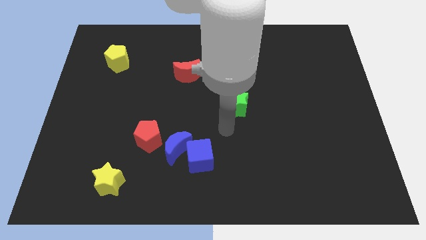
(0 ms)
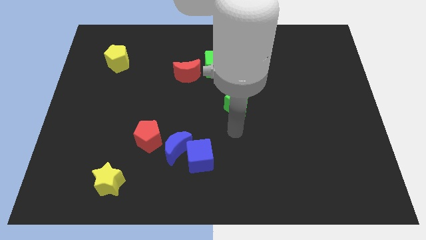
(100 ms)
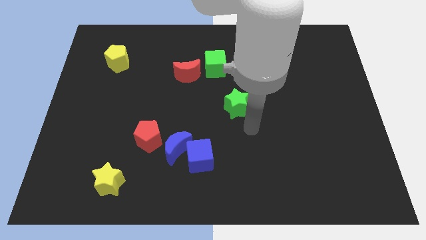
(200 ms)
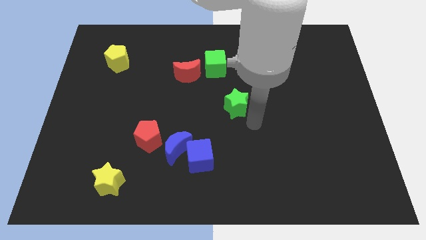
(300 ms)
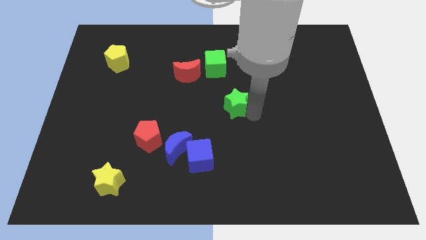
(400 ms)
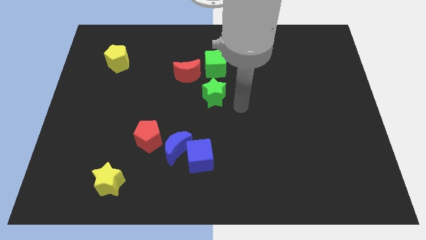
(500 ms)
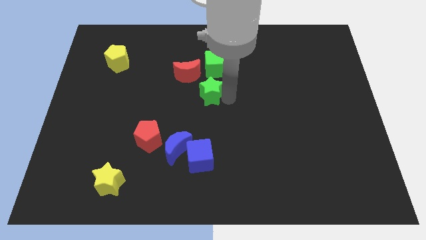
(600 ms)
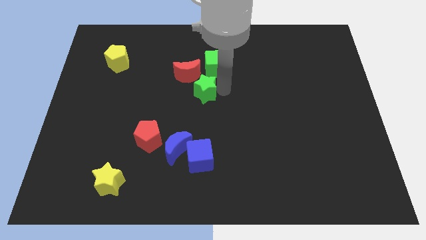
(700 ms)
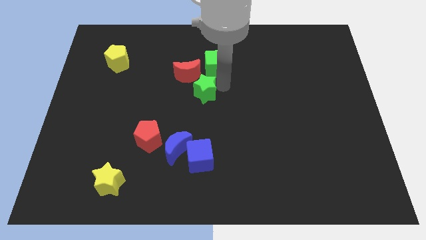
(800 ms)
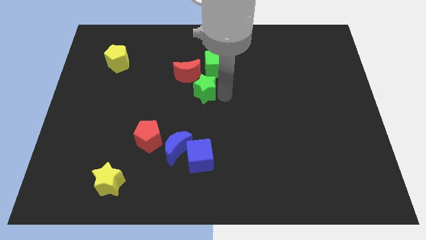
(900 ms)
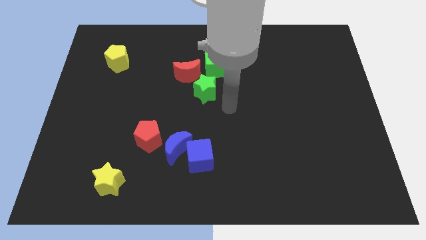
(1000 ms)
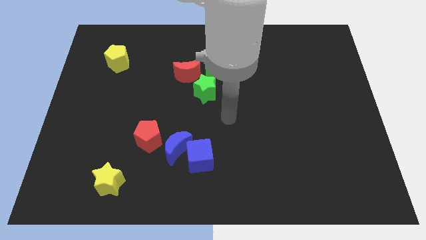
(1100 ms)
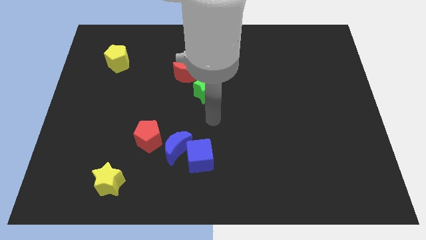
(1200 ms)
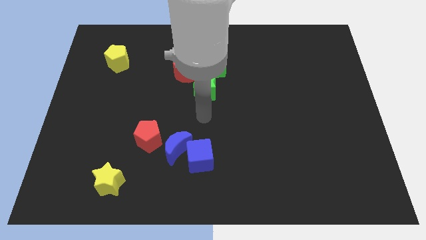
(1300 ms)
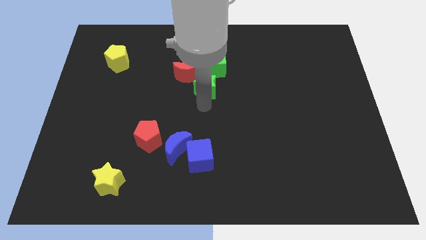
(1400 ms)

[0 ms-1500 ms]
push the green star into the green cube

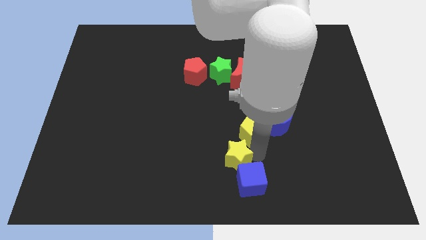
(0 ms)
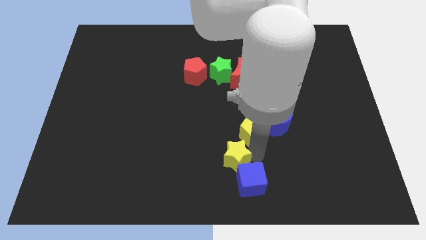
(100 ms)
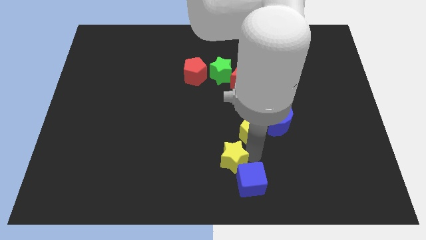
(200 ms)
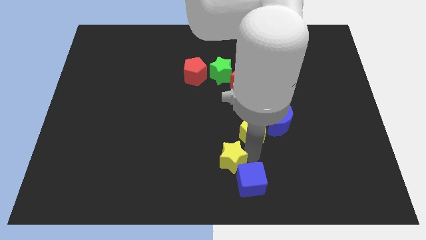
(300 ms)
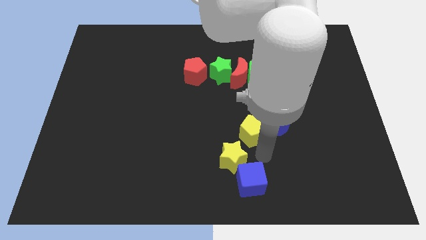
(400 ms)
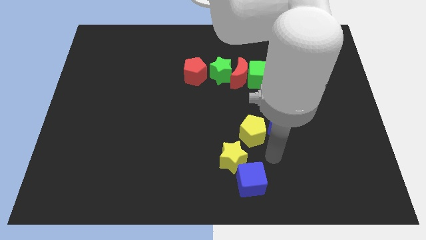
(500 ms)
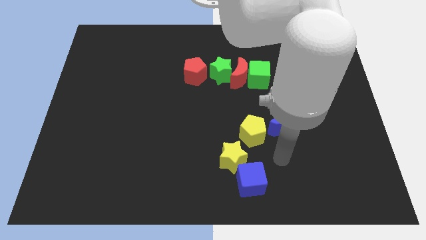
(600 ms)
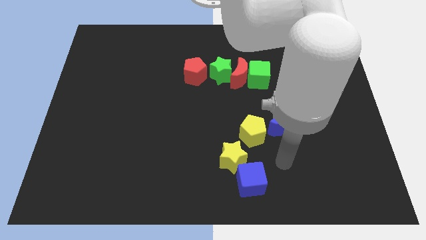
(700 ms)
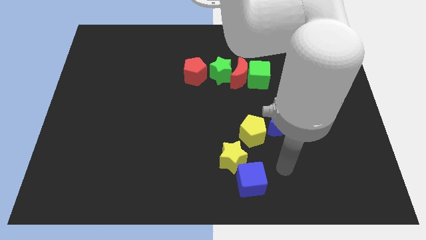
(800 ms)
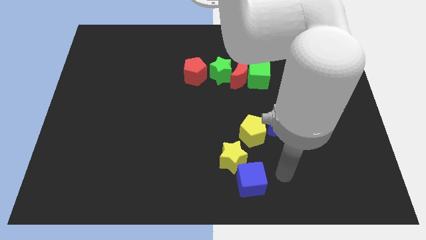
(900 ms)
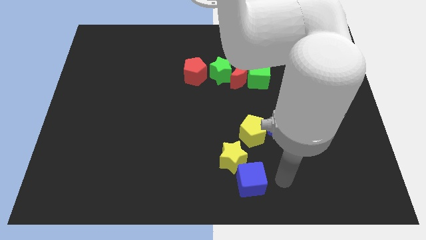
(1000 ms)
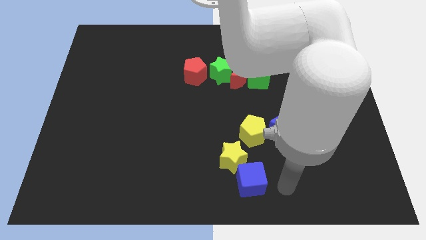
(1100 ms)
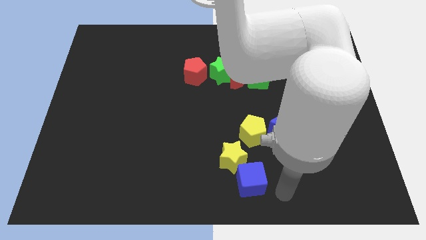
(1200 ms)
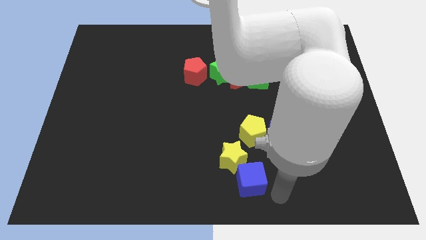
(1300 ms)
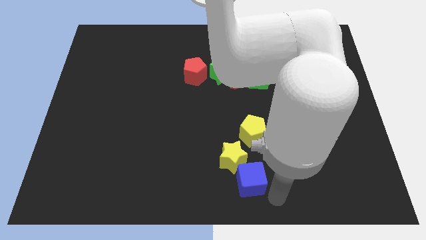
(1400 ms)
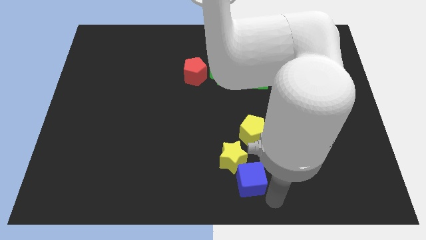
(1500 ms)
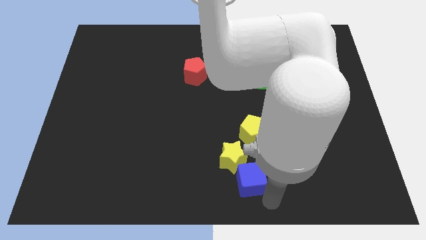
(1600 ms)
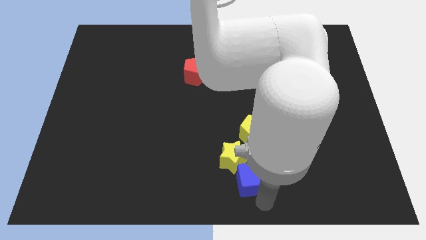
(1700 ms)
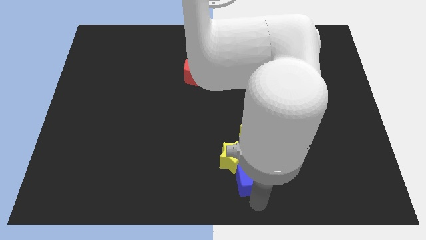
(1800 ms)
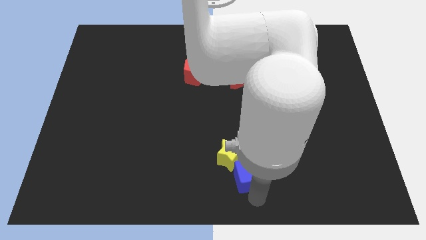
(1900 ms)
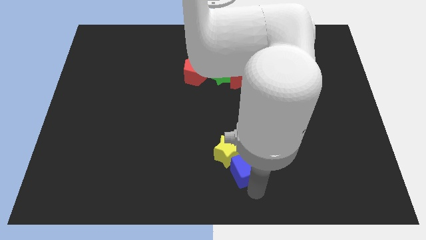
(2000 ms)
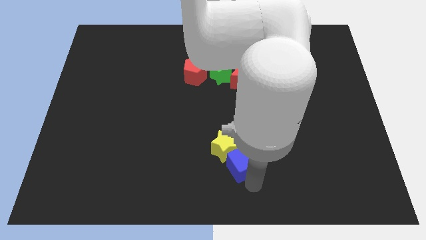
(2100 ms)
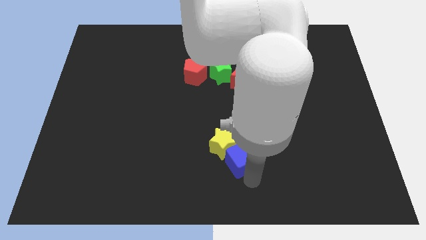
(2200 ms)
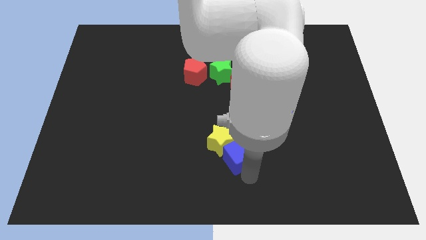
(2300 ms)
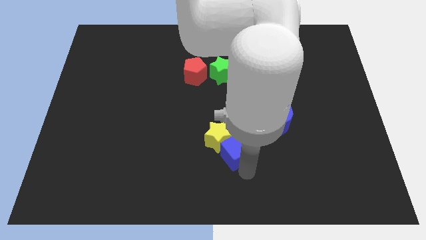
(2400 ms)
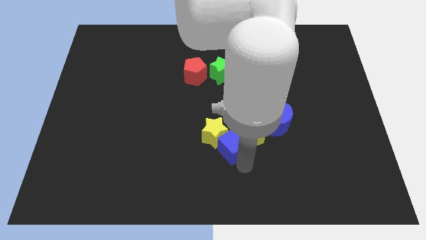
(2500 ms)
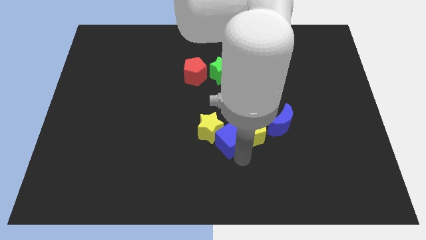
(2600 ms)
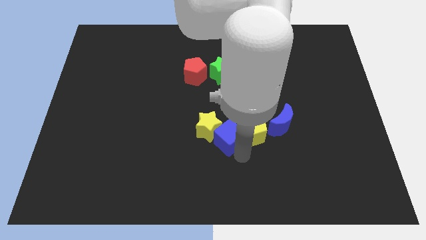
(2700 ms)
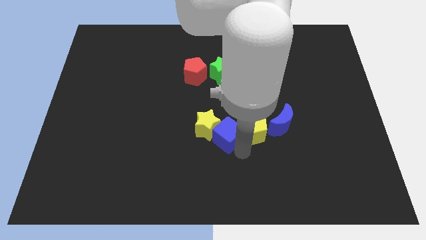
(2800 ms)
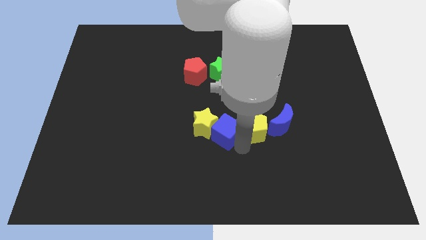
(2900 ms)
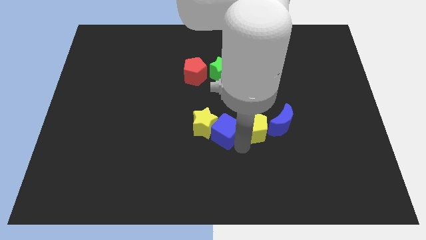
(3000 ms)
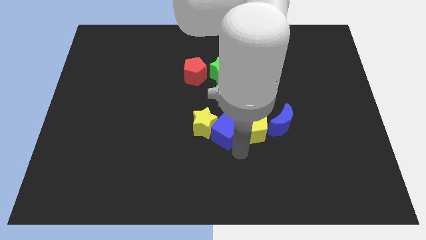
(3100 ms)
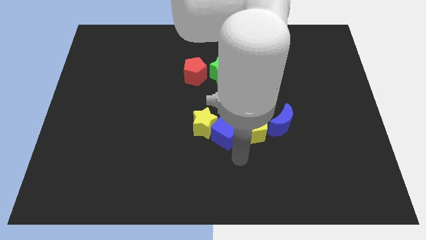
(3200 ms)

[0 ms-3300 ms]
move yellow star and blue cube

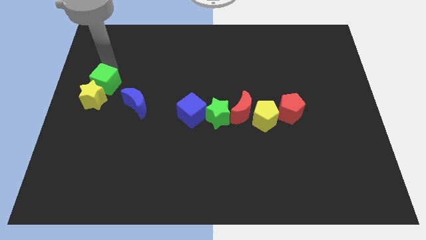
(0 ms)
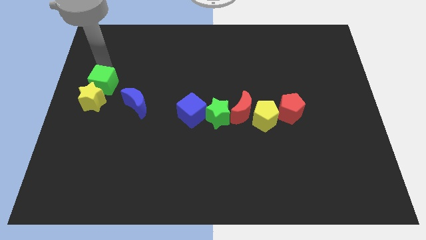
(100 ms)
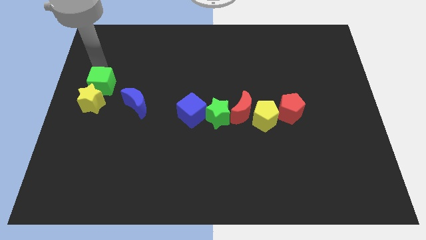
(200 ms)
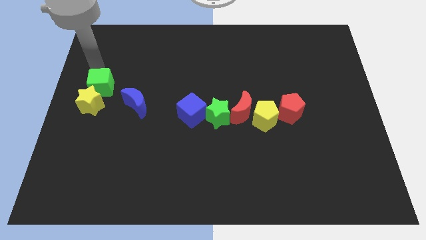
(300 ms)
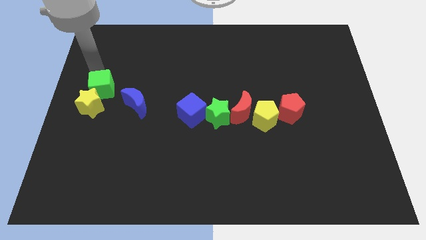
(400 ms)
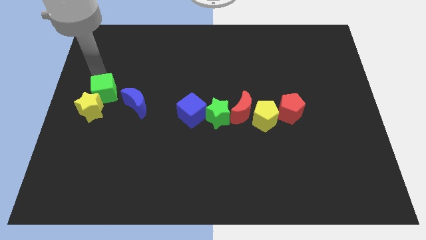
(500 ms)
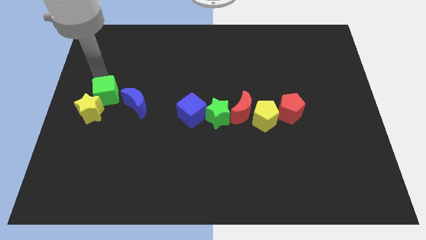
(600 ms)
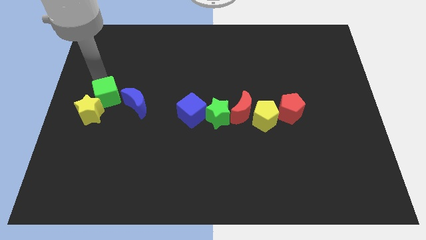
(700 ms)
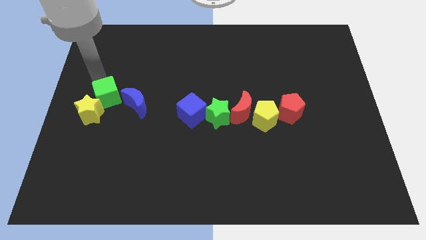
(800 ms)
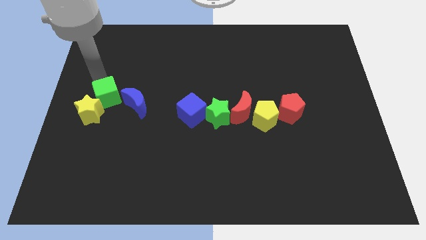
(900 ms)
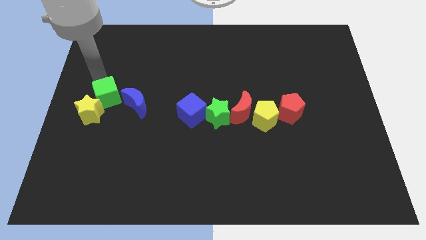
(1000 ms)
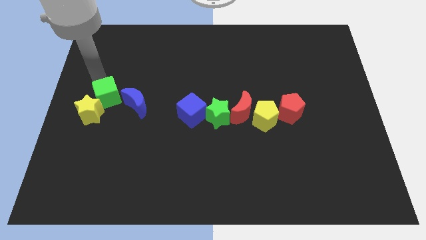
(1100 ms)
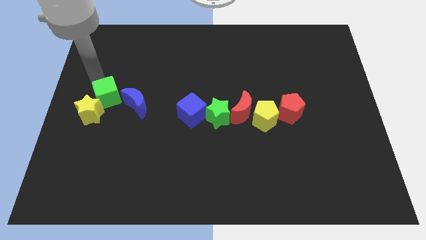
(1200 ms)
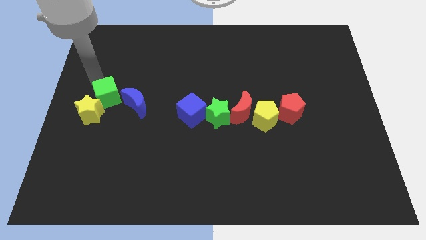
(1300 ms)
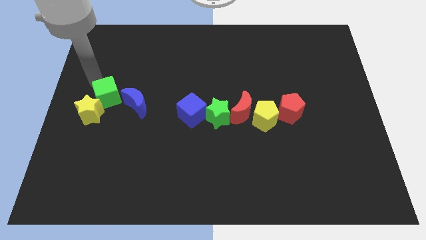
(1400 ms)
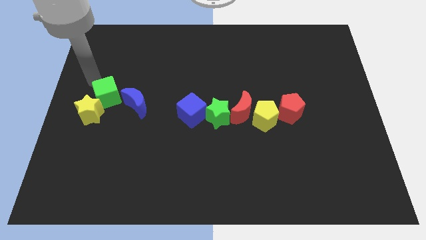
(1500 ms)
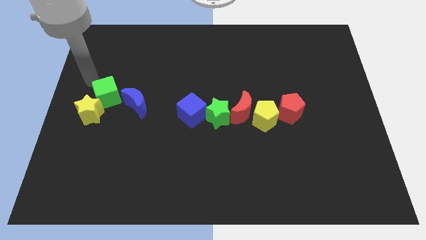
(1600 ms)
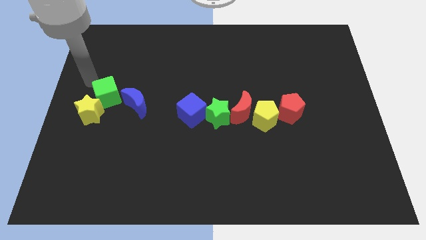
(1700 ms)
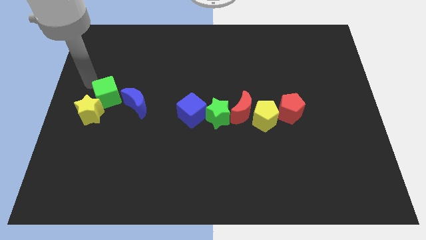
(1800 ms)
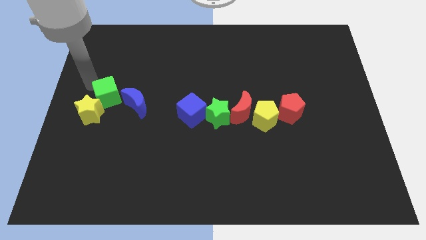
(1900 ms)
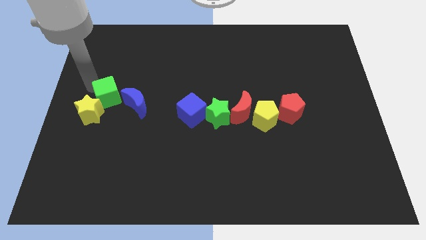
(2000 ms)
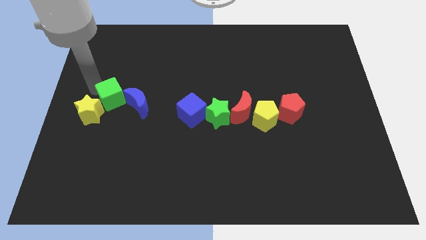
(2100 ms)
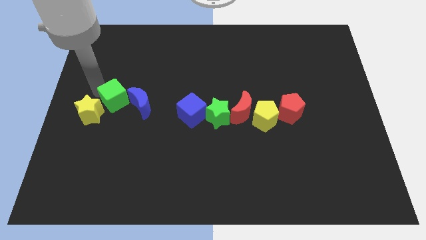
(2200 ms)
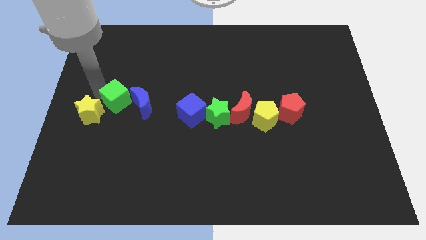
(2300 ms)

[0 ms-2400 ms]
place the green cube to right of yellow star

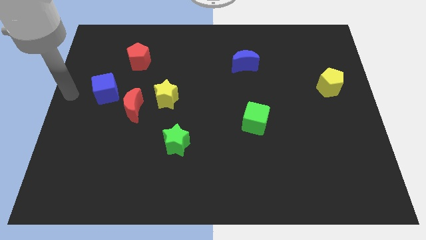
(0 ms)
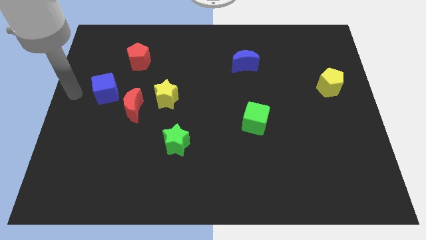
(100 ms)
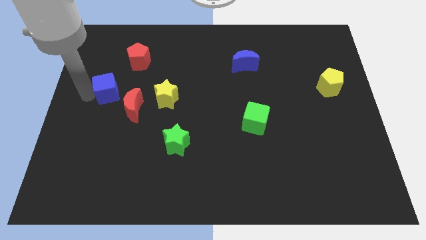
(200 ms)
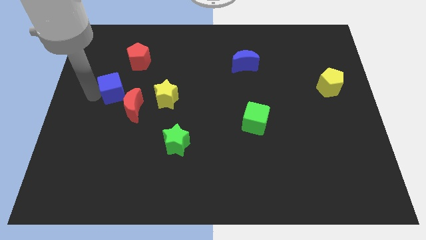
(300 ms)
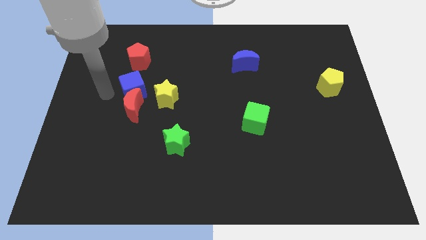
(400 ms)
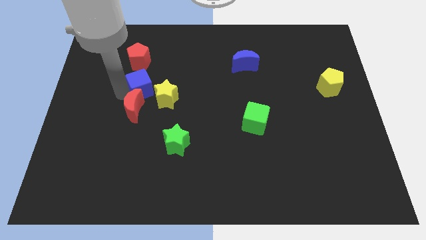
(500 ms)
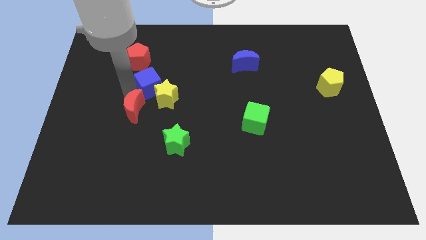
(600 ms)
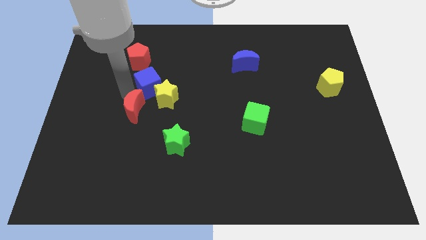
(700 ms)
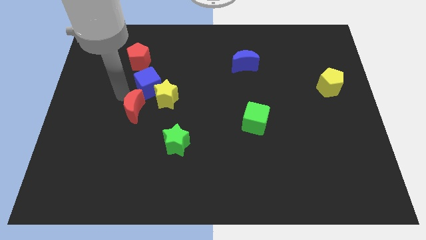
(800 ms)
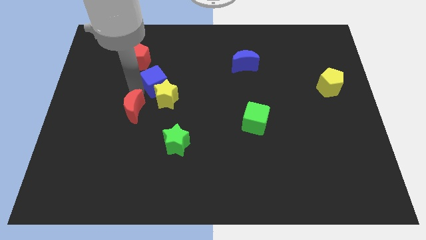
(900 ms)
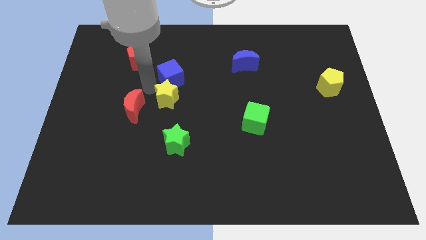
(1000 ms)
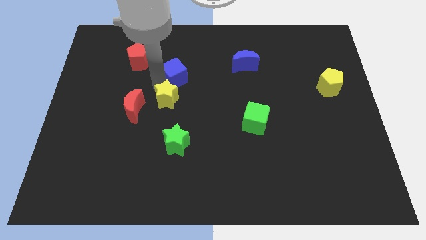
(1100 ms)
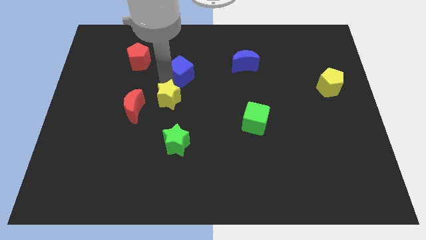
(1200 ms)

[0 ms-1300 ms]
move the red moon with the blue cube

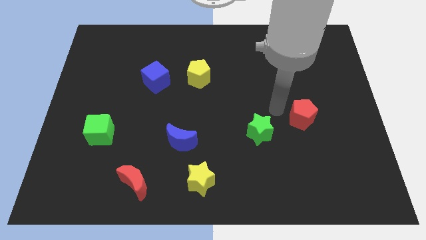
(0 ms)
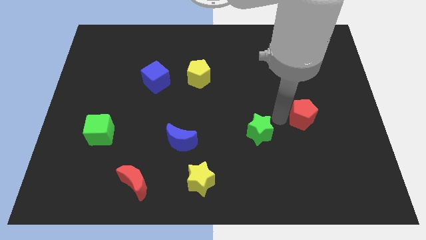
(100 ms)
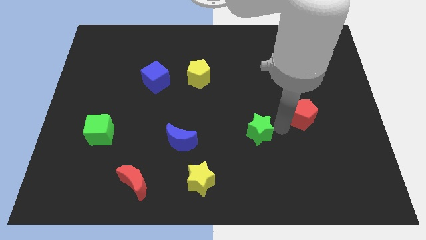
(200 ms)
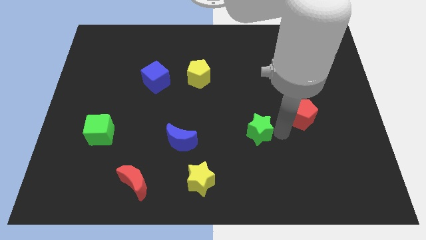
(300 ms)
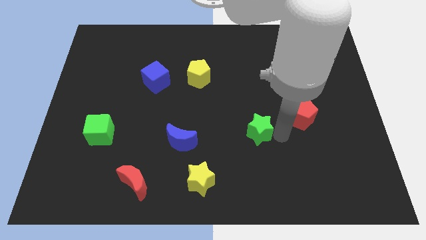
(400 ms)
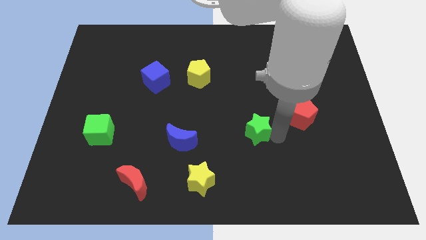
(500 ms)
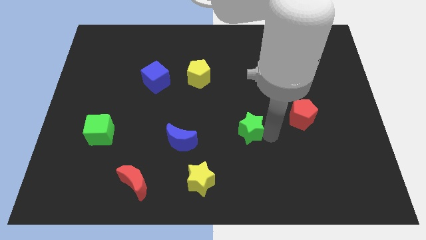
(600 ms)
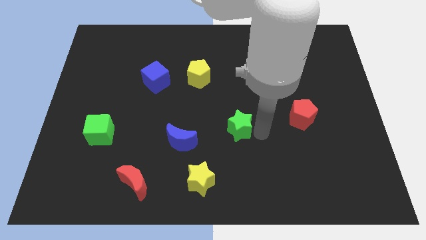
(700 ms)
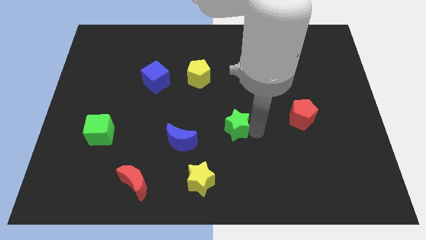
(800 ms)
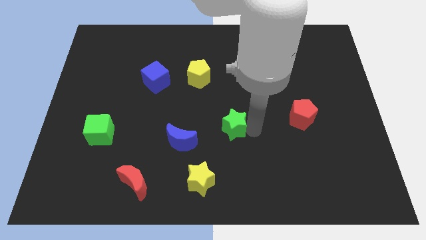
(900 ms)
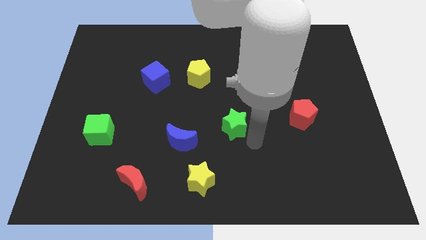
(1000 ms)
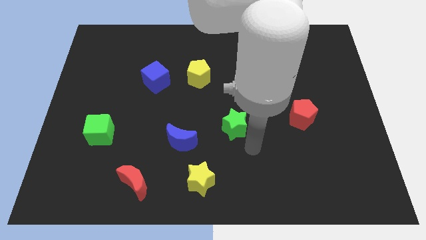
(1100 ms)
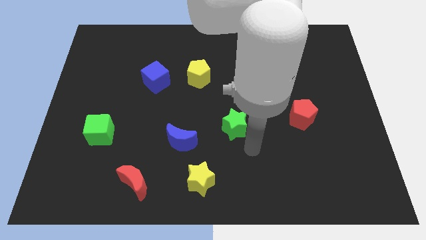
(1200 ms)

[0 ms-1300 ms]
push the green star towards the left side
